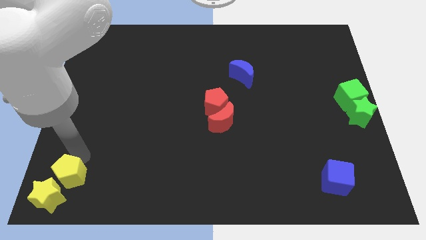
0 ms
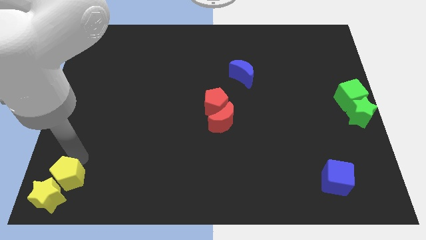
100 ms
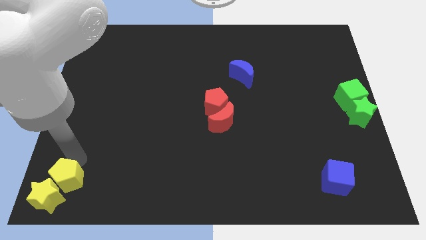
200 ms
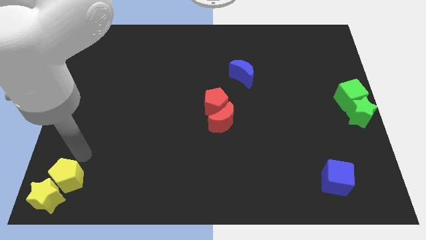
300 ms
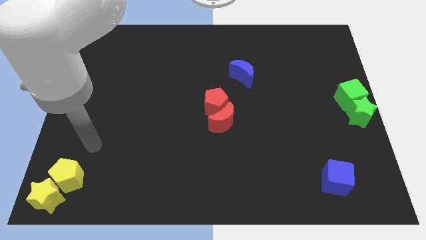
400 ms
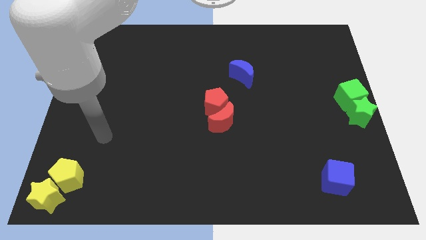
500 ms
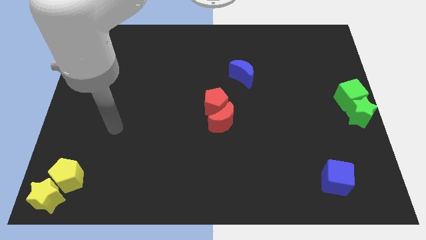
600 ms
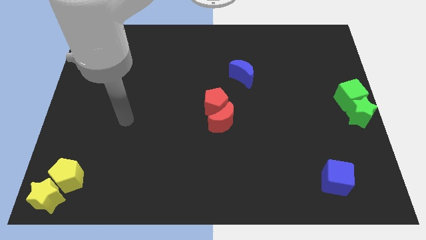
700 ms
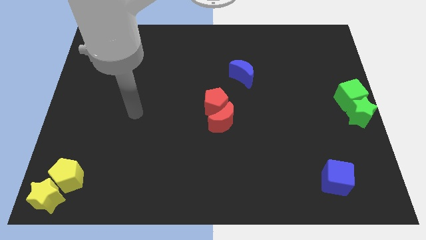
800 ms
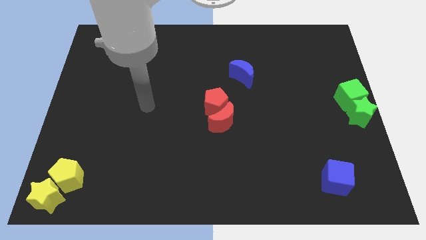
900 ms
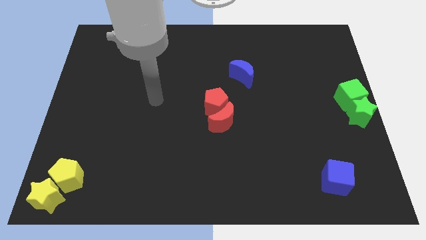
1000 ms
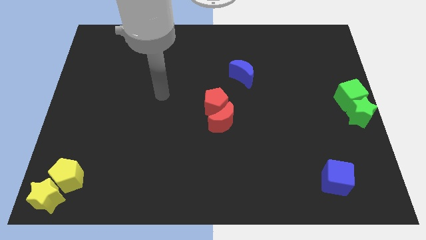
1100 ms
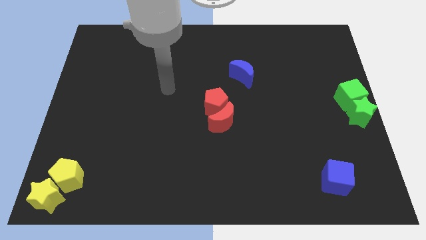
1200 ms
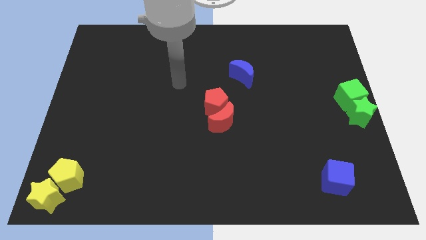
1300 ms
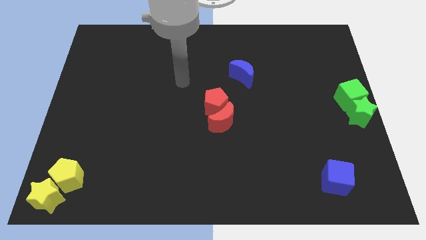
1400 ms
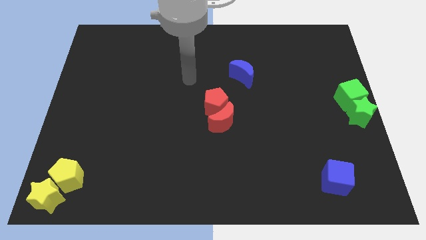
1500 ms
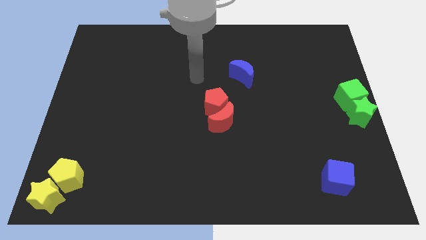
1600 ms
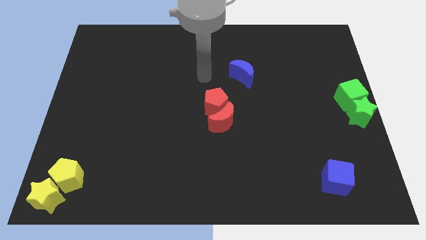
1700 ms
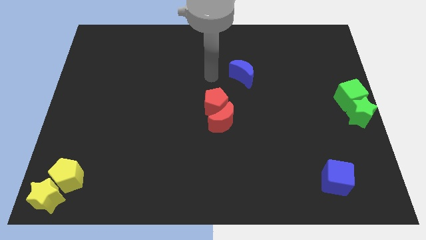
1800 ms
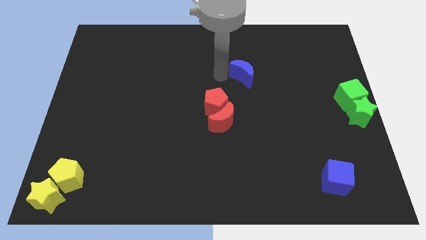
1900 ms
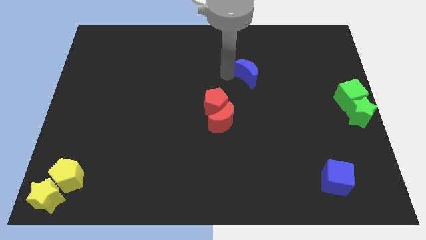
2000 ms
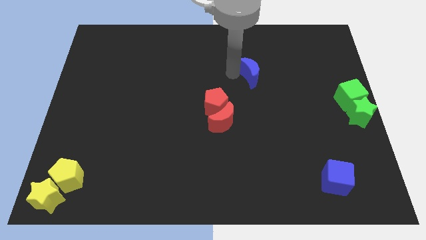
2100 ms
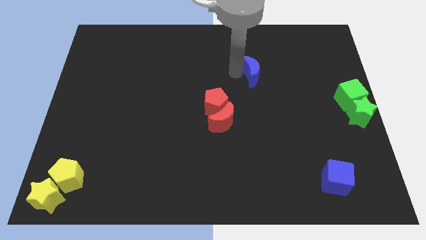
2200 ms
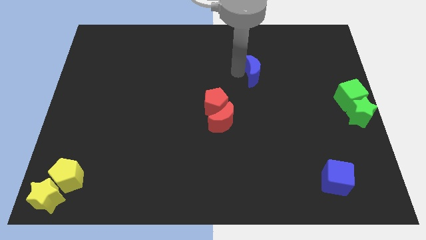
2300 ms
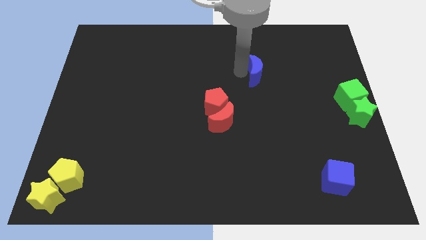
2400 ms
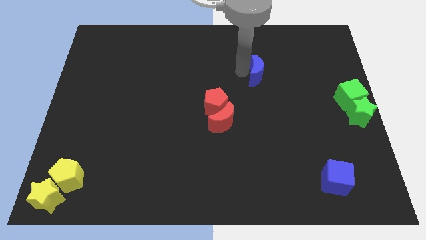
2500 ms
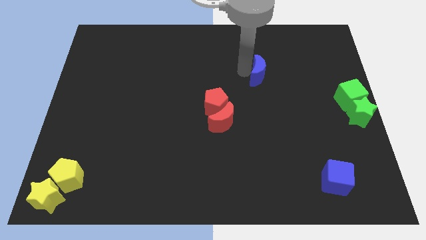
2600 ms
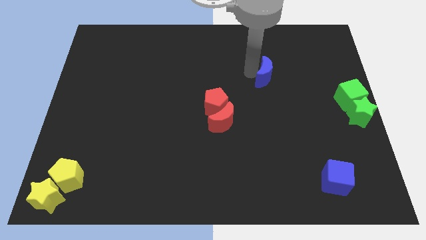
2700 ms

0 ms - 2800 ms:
move your arm to the left of the blue crescent

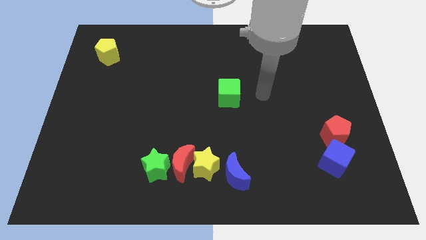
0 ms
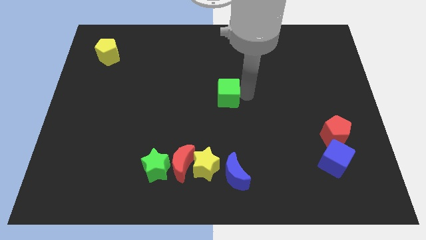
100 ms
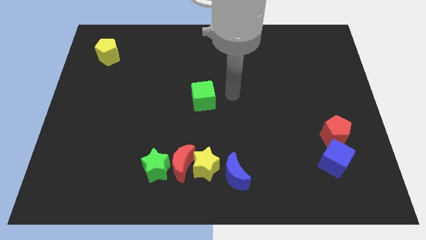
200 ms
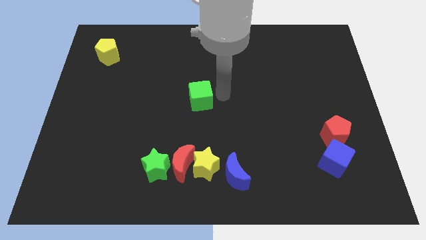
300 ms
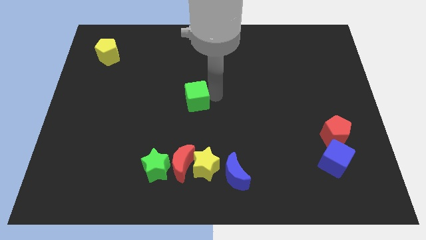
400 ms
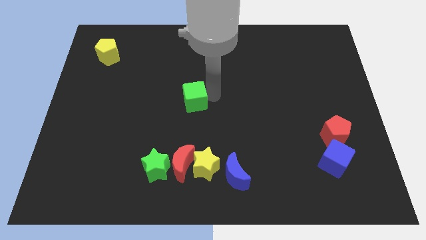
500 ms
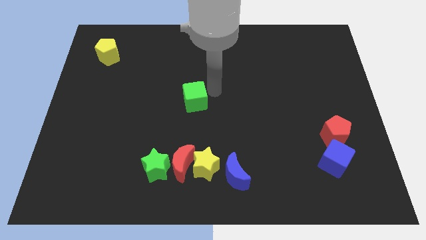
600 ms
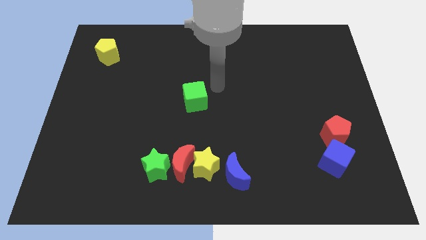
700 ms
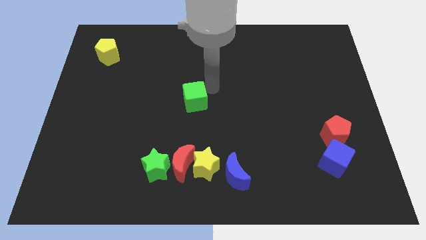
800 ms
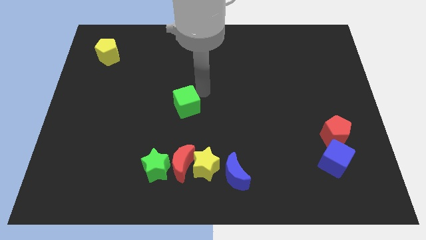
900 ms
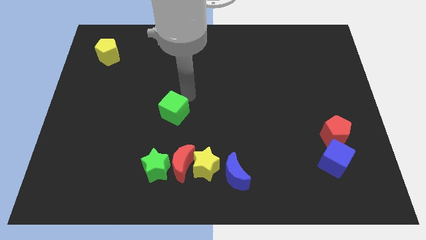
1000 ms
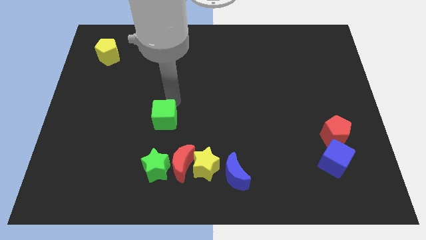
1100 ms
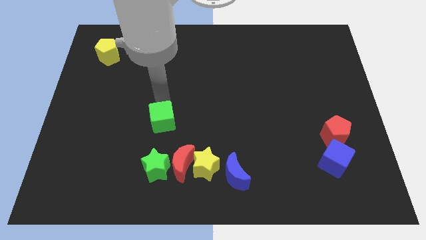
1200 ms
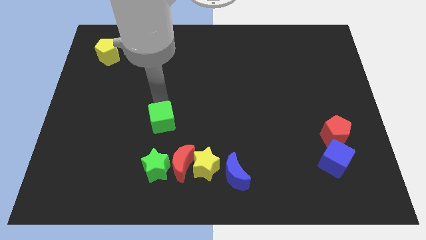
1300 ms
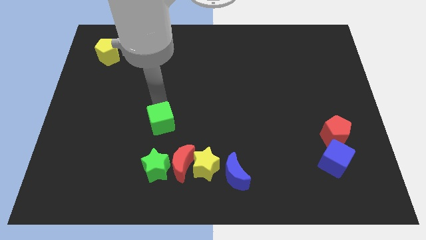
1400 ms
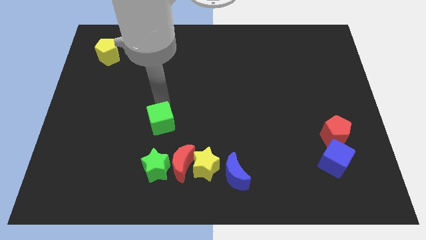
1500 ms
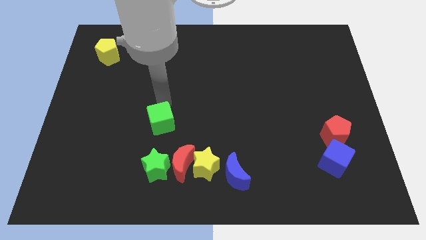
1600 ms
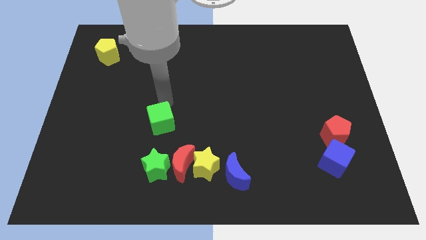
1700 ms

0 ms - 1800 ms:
push the green cube to the top of the green star

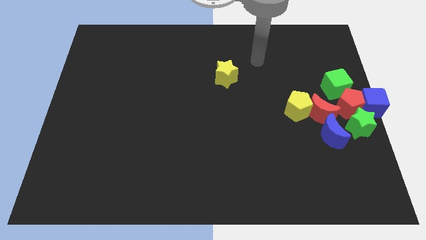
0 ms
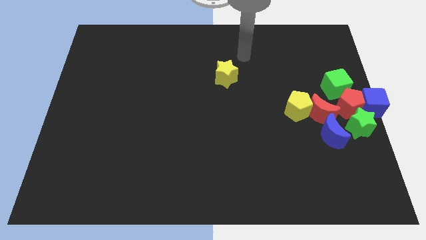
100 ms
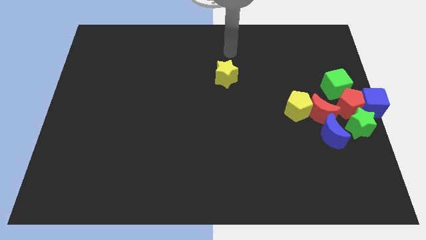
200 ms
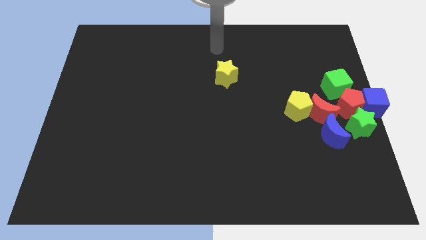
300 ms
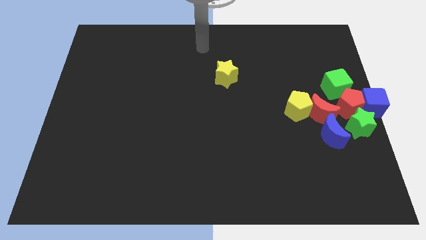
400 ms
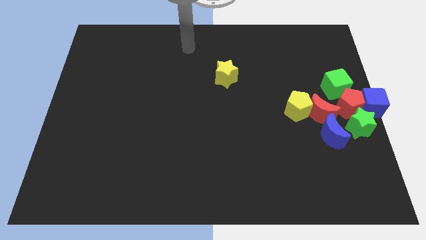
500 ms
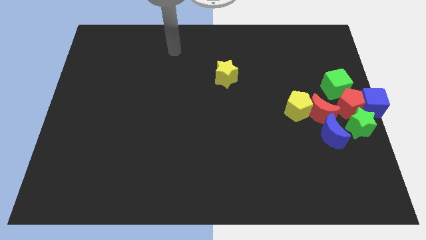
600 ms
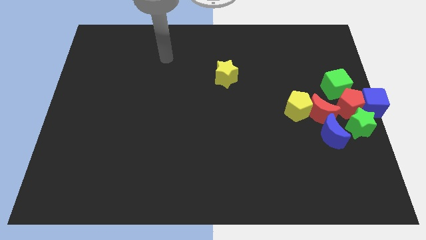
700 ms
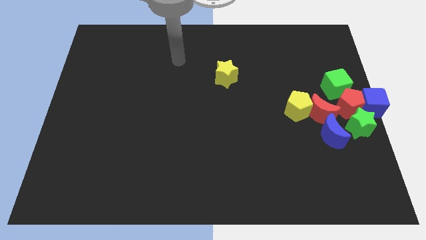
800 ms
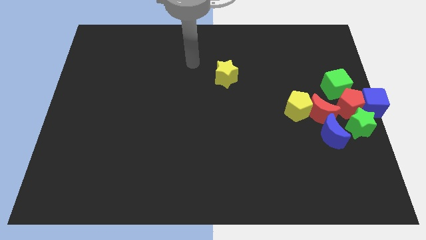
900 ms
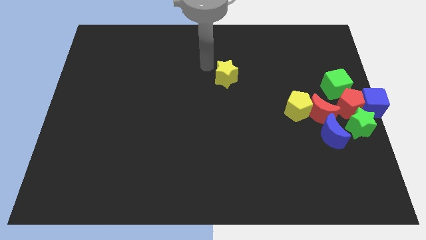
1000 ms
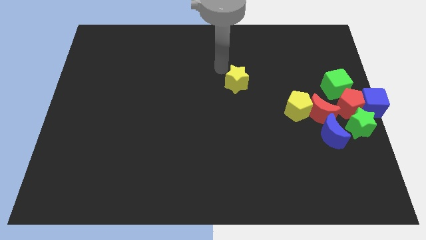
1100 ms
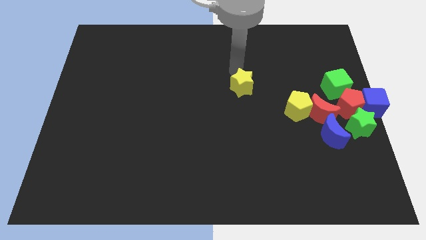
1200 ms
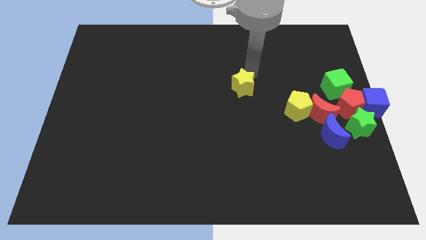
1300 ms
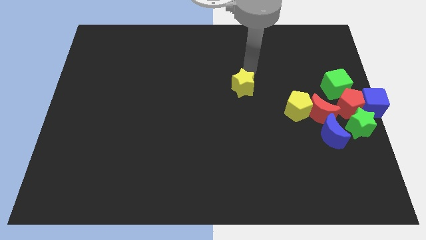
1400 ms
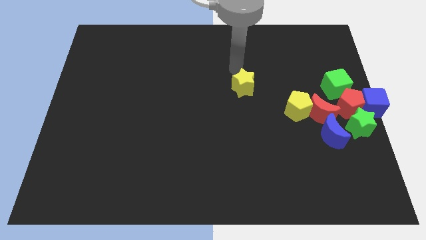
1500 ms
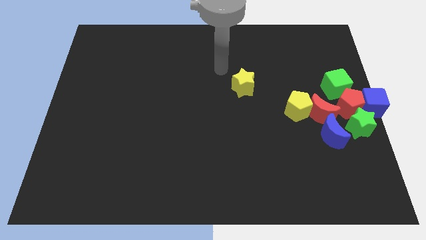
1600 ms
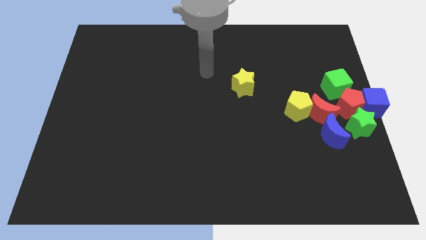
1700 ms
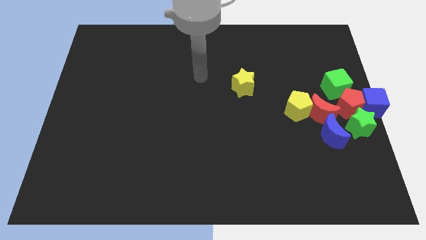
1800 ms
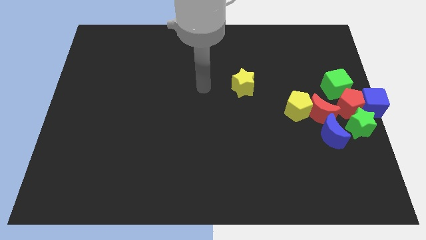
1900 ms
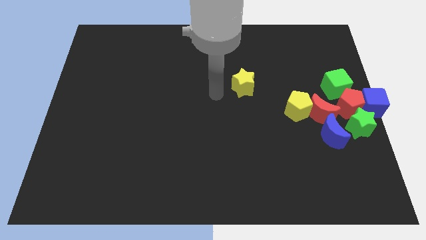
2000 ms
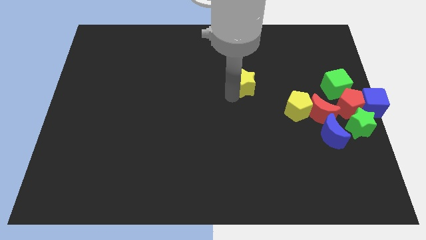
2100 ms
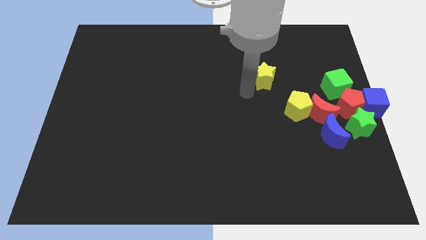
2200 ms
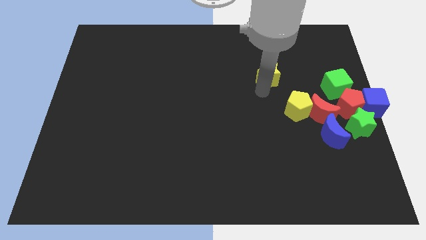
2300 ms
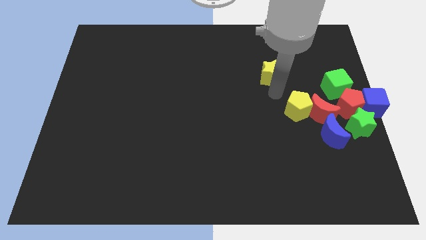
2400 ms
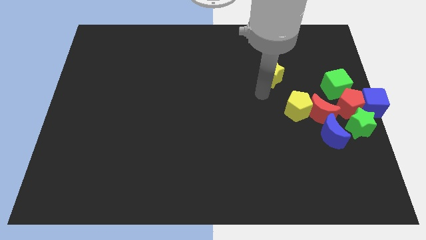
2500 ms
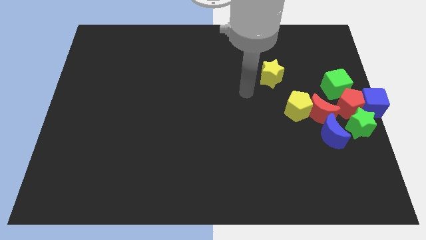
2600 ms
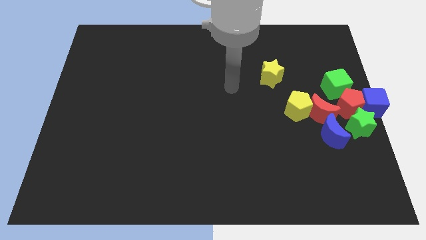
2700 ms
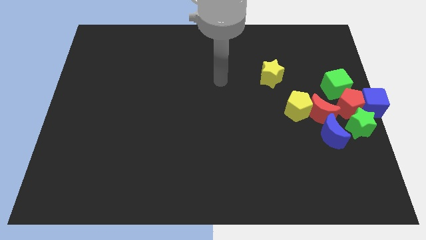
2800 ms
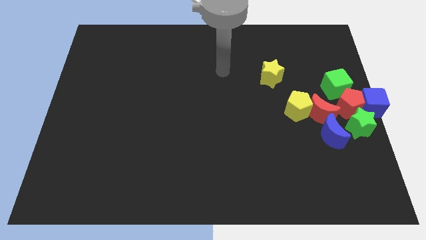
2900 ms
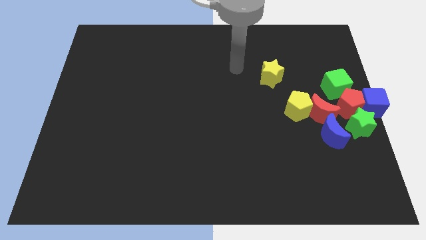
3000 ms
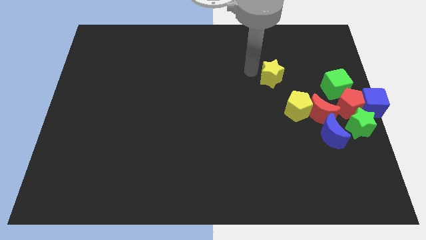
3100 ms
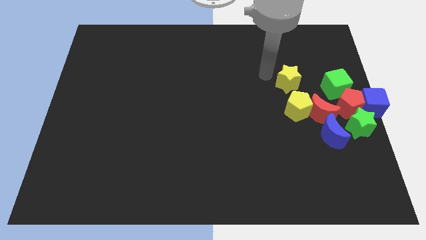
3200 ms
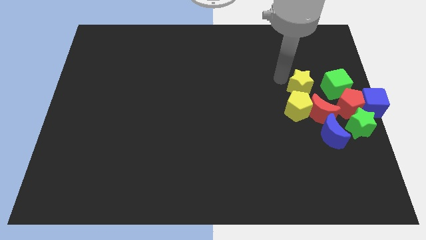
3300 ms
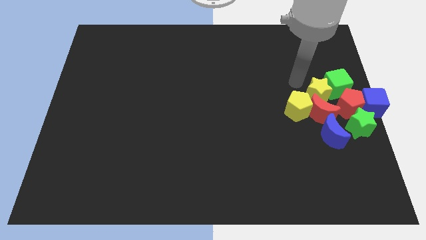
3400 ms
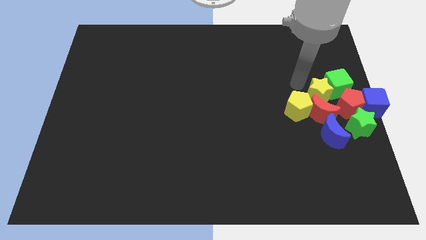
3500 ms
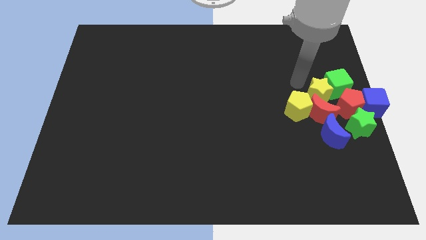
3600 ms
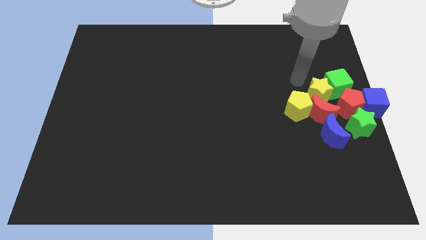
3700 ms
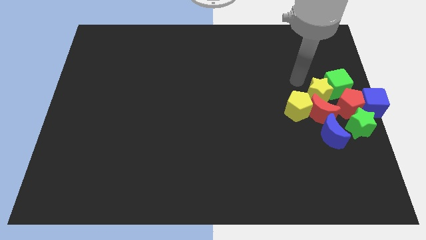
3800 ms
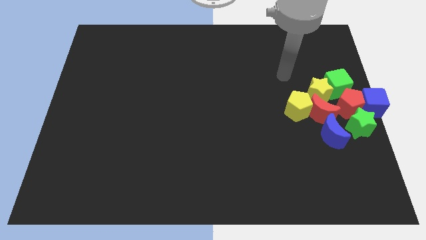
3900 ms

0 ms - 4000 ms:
move the yellow star to the left of the green cube

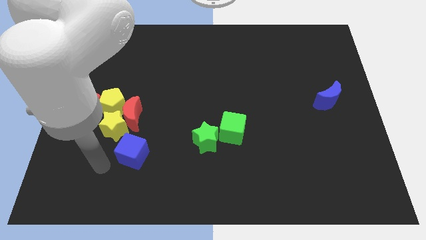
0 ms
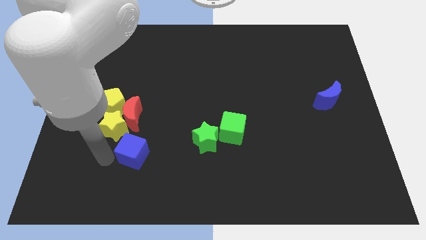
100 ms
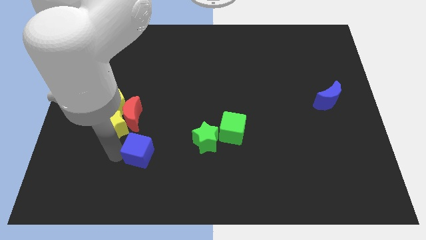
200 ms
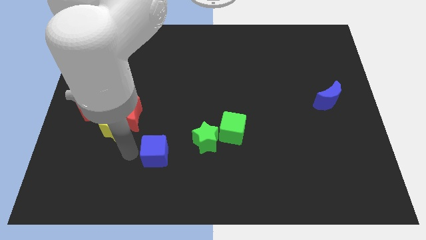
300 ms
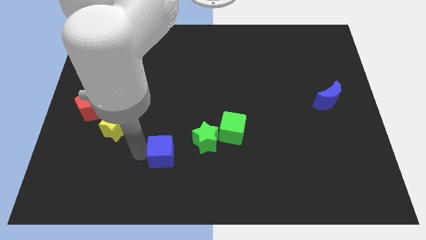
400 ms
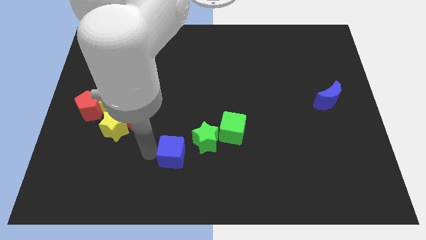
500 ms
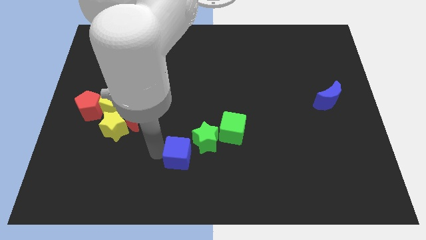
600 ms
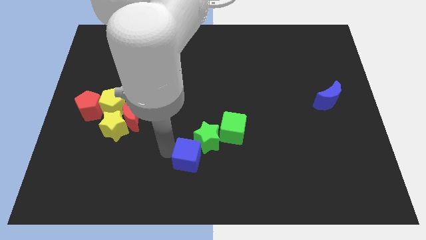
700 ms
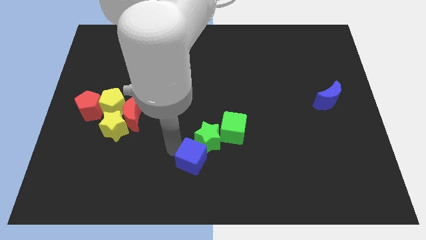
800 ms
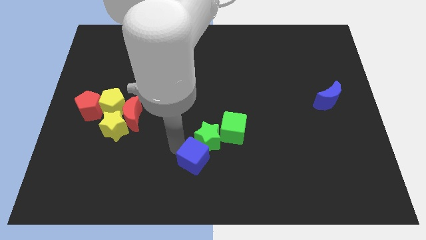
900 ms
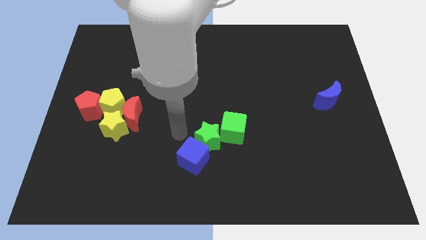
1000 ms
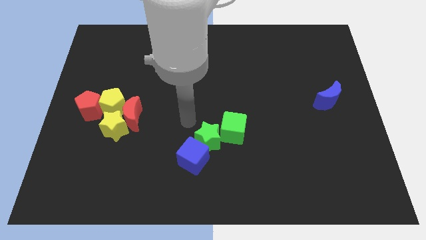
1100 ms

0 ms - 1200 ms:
push the blue cube towards the left to the green star
